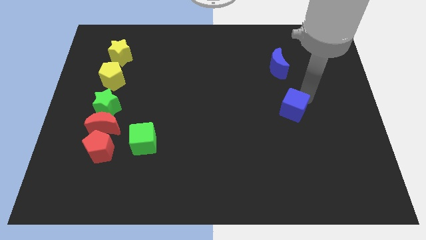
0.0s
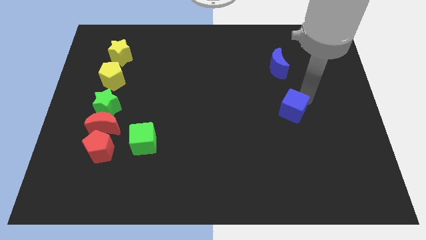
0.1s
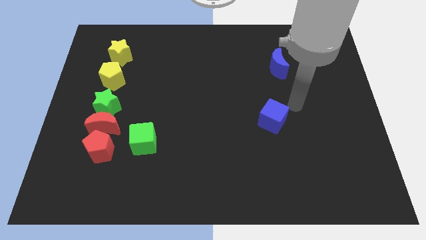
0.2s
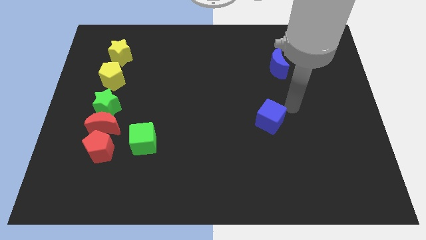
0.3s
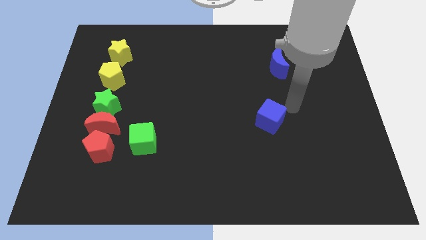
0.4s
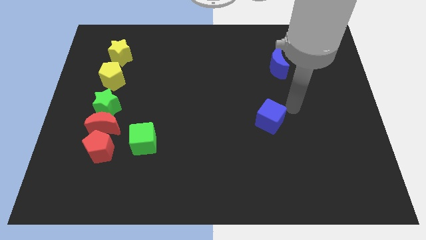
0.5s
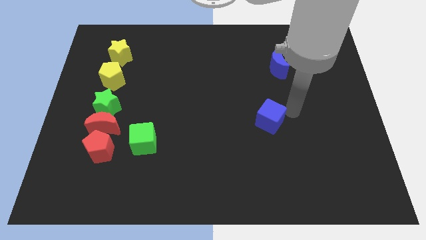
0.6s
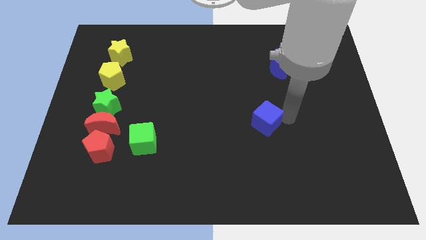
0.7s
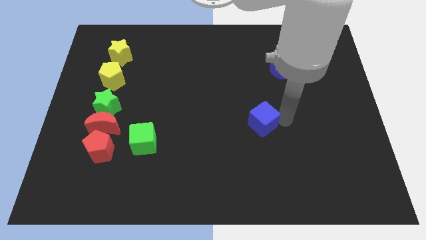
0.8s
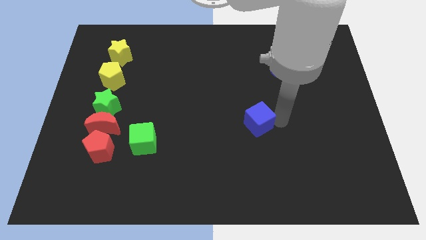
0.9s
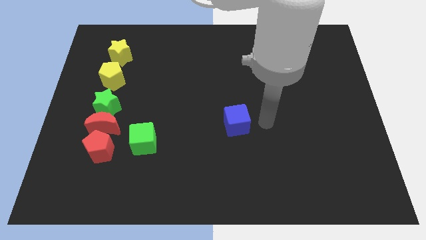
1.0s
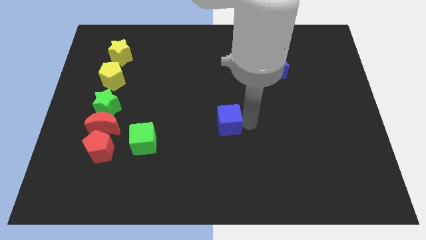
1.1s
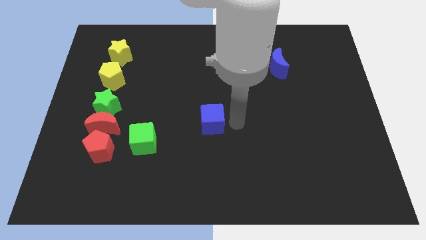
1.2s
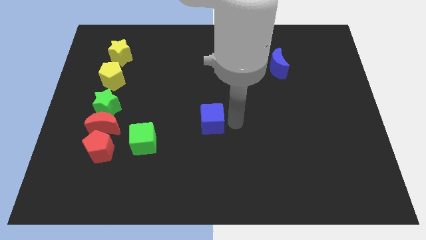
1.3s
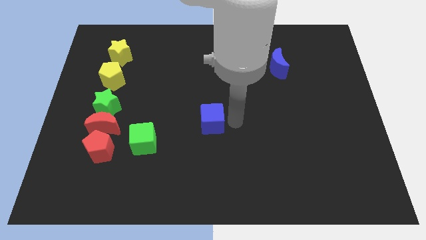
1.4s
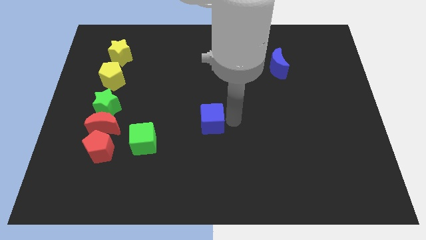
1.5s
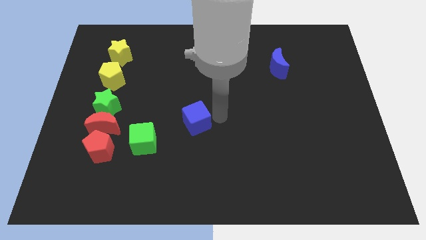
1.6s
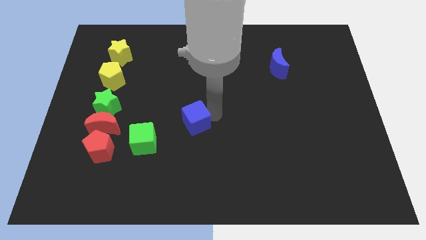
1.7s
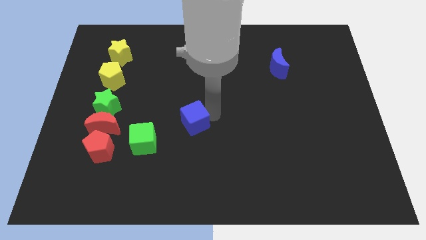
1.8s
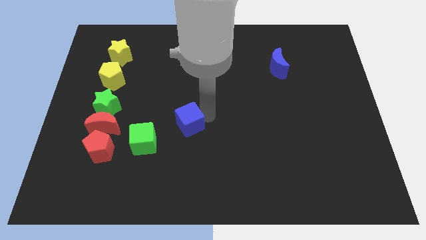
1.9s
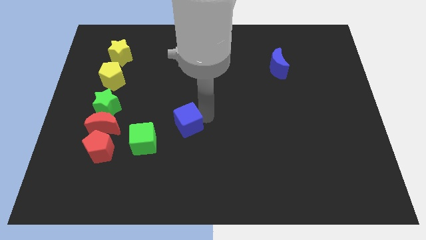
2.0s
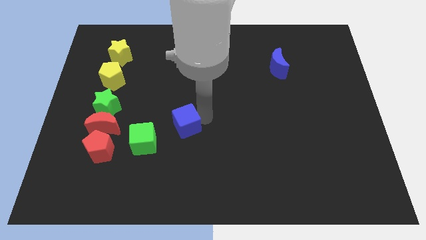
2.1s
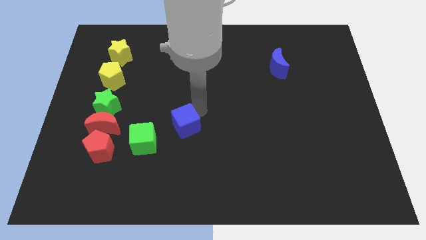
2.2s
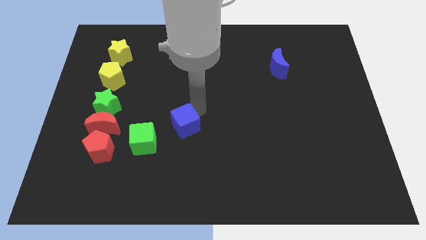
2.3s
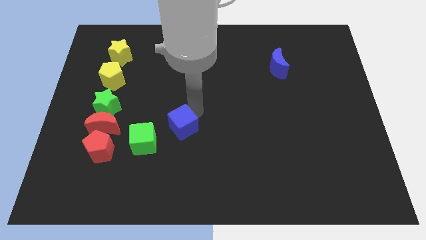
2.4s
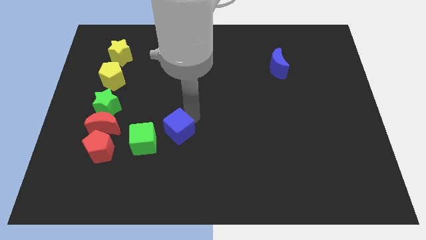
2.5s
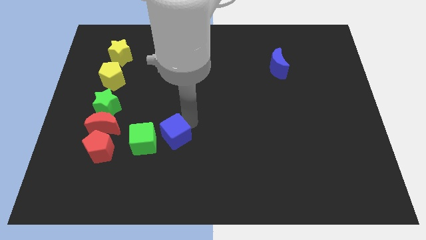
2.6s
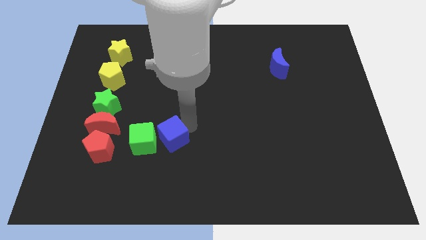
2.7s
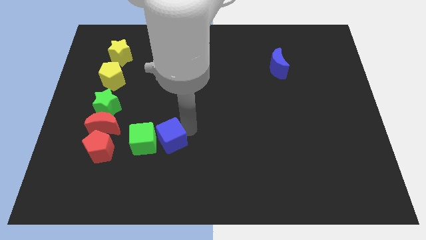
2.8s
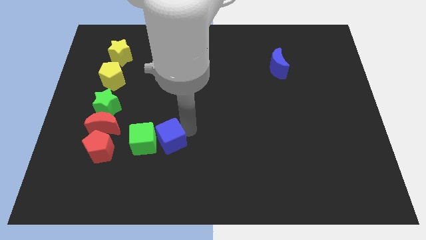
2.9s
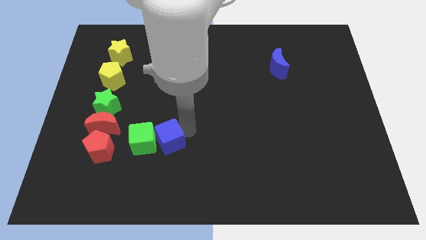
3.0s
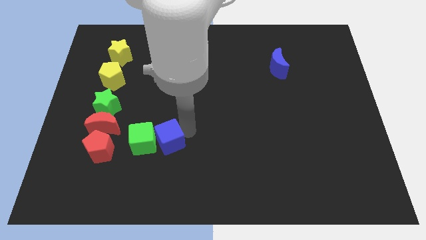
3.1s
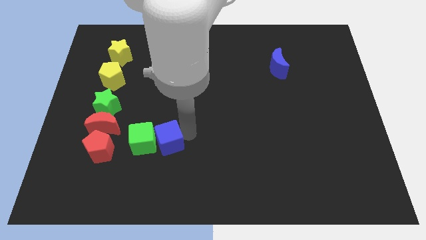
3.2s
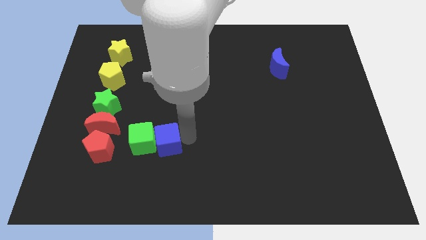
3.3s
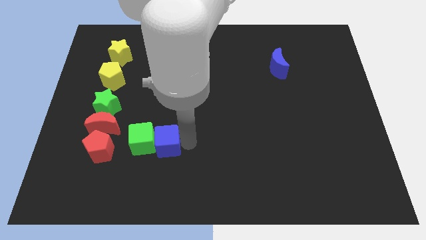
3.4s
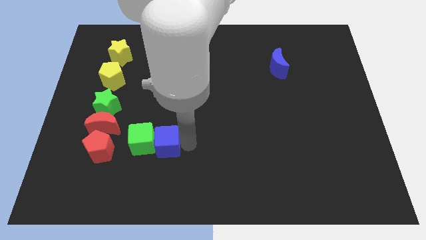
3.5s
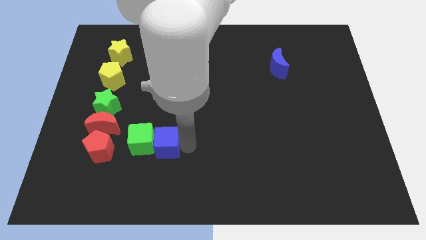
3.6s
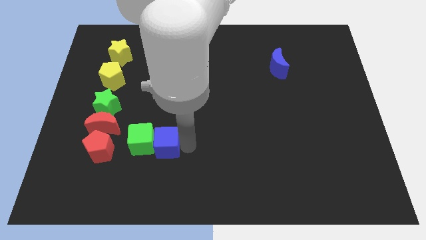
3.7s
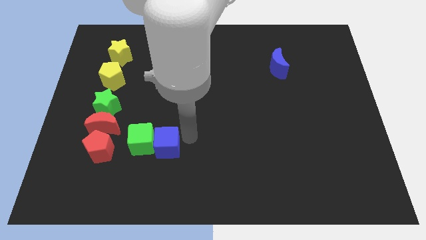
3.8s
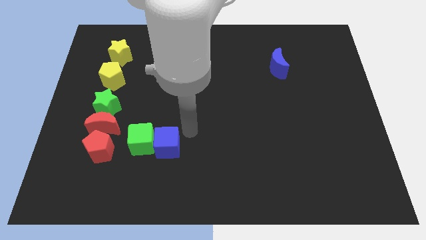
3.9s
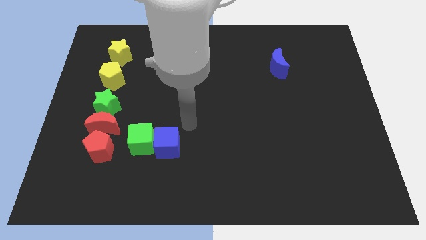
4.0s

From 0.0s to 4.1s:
push the blue cube into the green cube

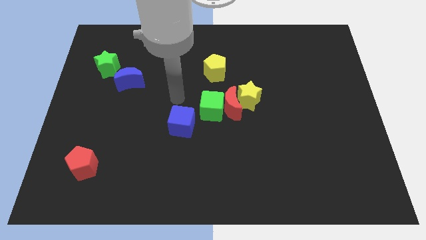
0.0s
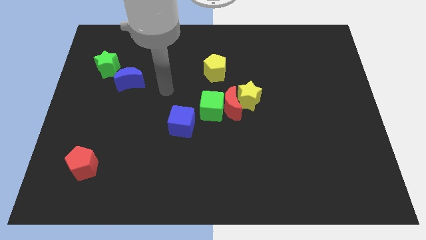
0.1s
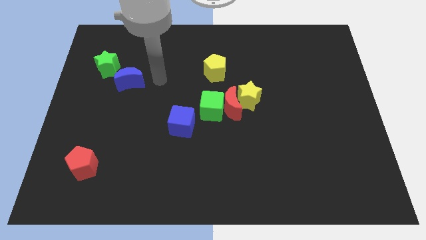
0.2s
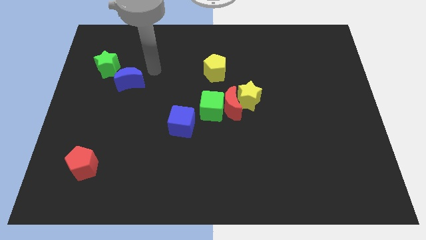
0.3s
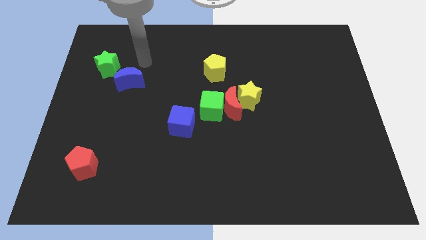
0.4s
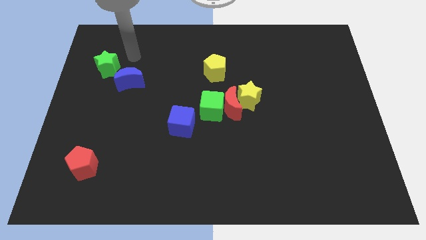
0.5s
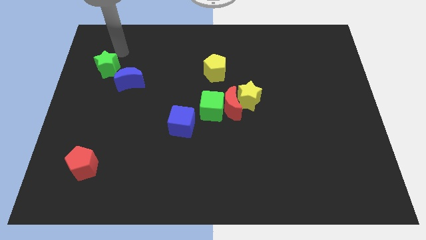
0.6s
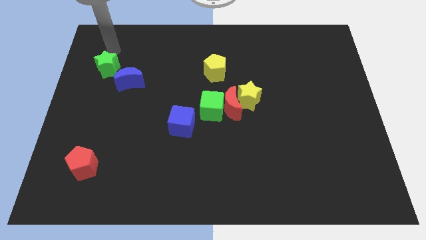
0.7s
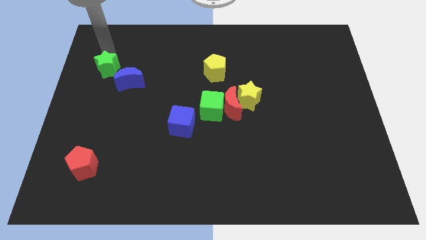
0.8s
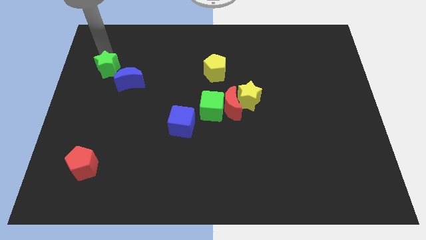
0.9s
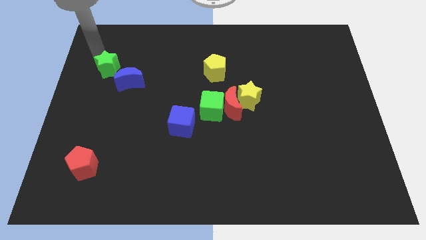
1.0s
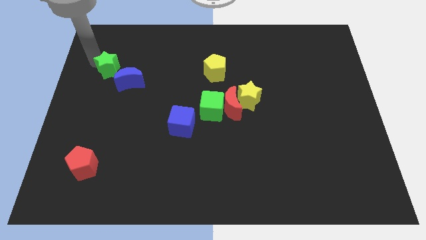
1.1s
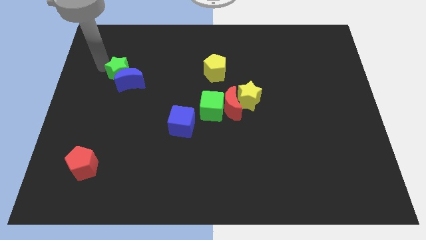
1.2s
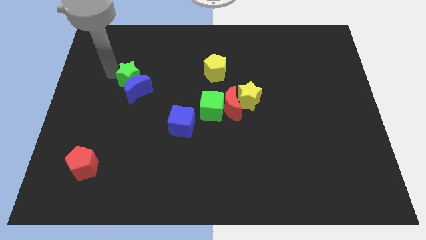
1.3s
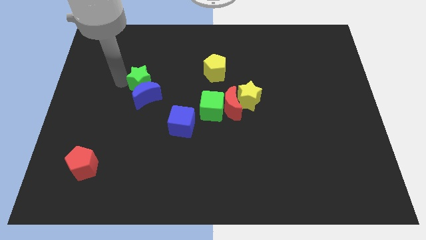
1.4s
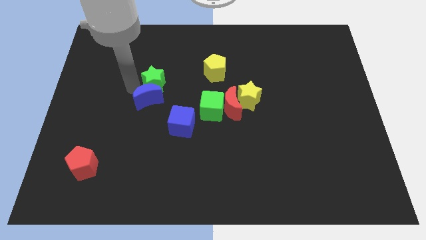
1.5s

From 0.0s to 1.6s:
push the green star into the blue moon

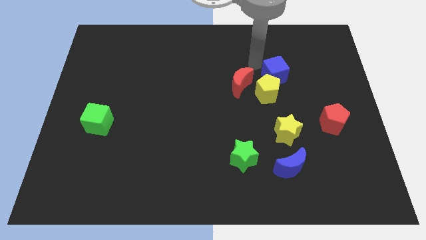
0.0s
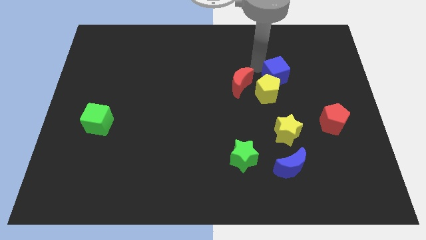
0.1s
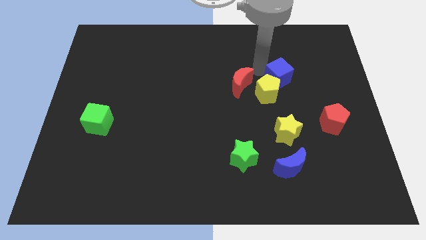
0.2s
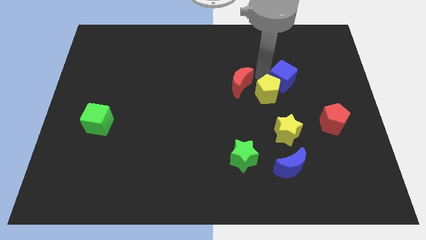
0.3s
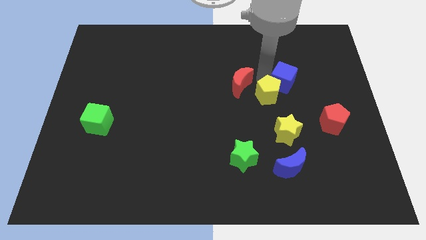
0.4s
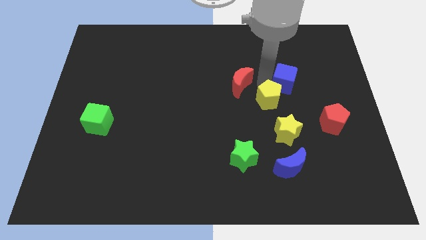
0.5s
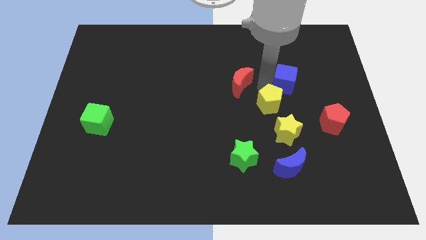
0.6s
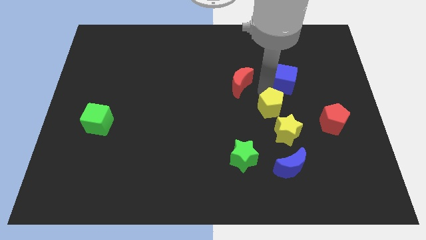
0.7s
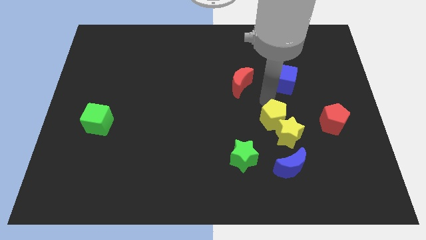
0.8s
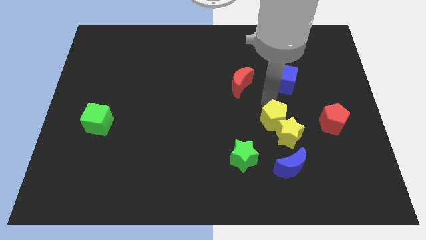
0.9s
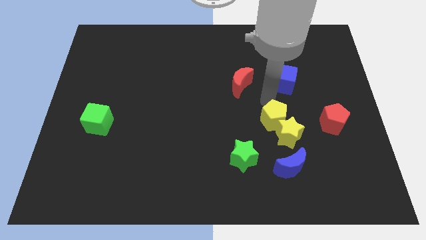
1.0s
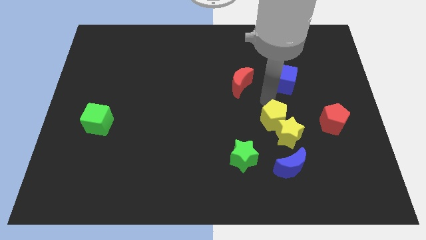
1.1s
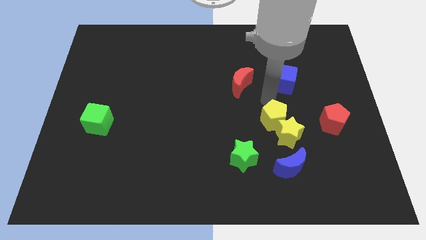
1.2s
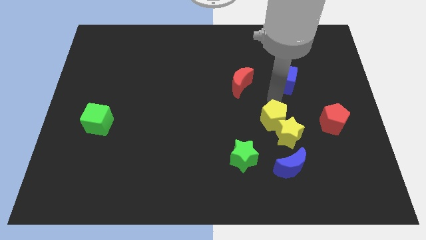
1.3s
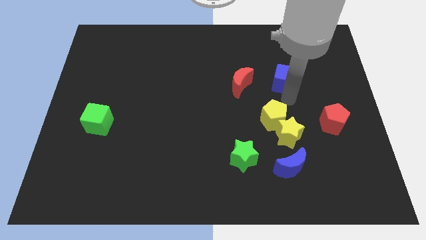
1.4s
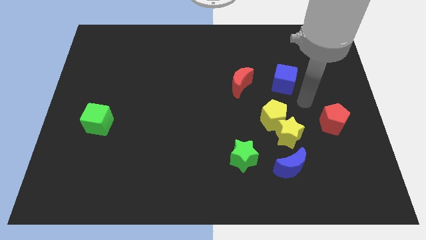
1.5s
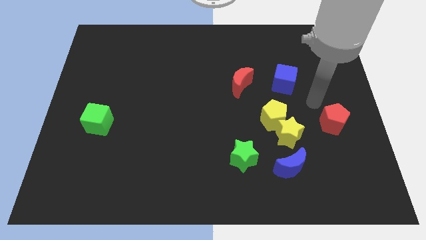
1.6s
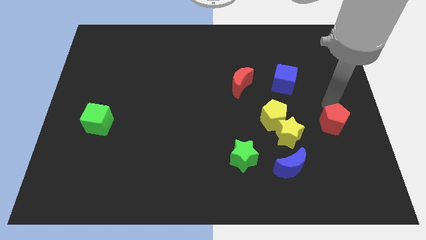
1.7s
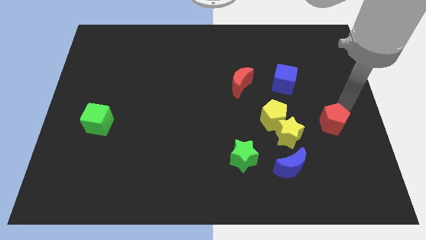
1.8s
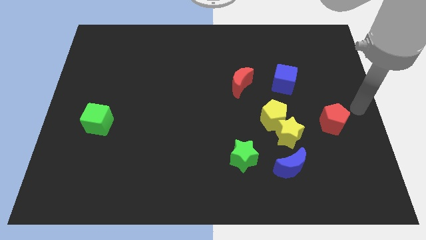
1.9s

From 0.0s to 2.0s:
push the yellow pentagon into the yellow star

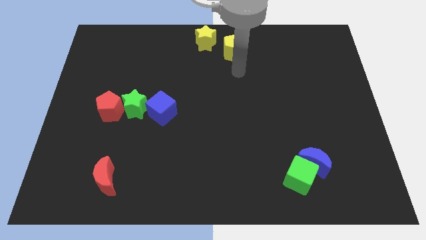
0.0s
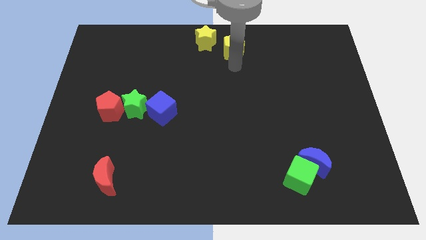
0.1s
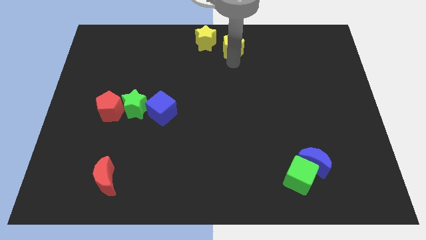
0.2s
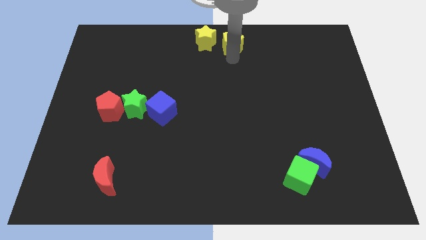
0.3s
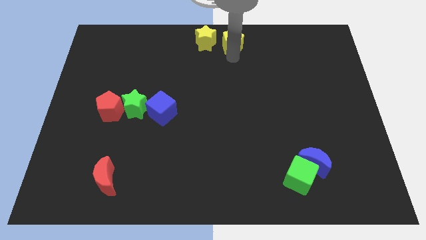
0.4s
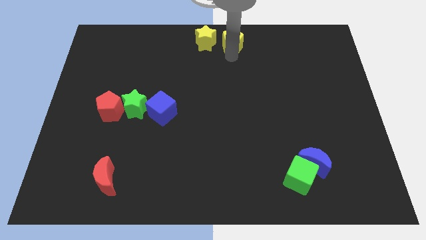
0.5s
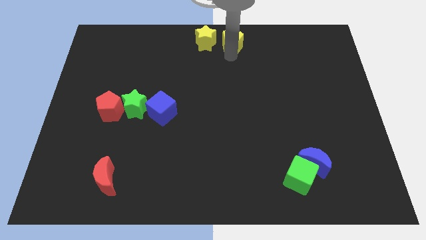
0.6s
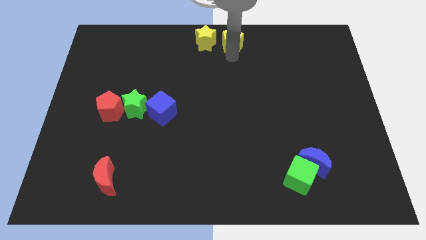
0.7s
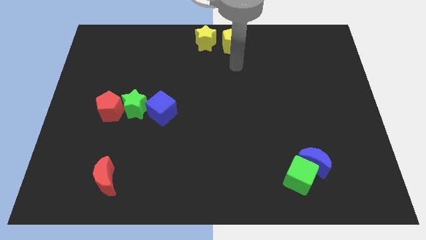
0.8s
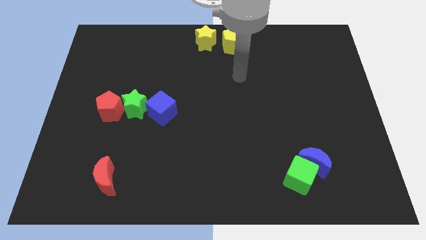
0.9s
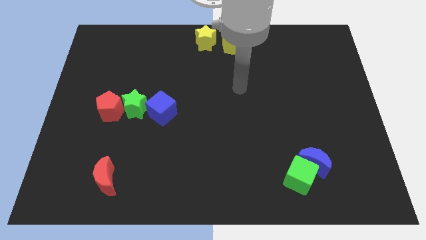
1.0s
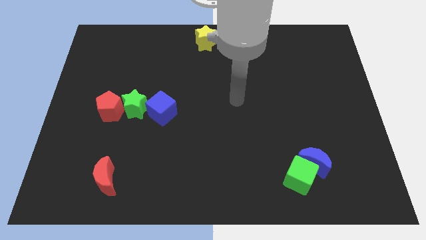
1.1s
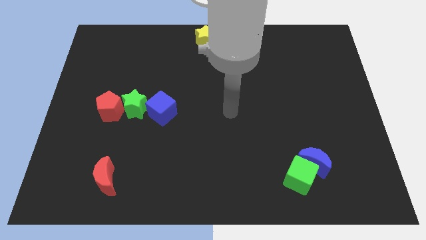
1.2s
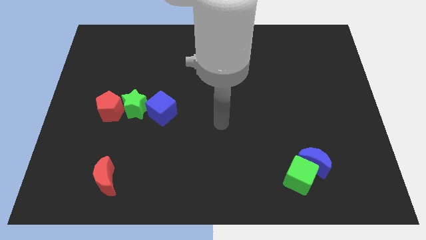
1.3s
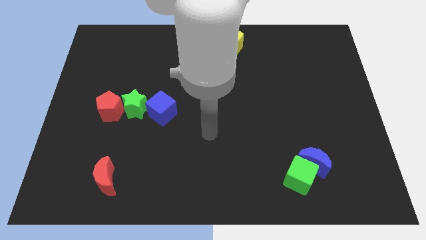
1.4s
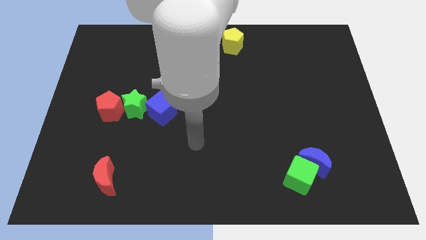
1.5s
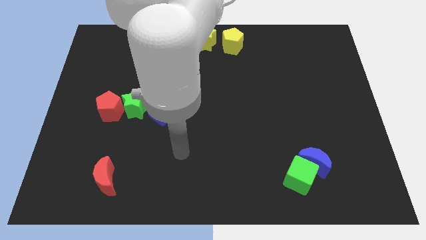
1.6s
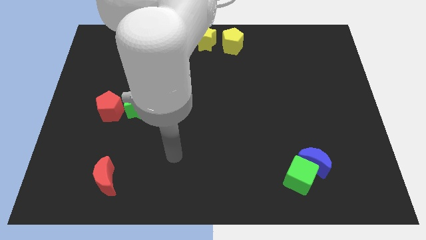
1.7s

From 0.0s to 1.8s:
push the yellow pentagon to the right of the yellow star
